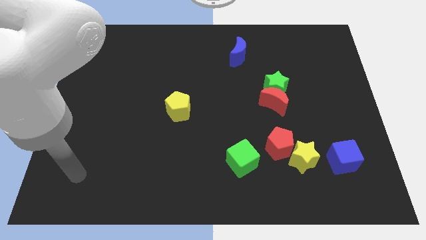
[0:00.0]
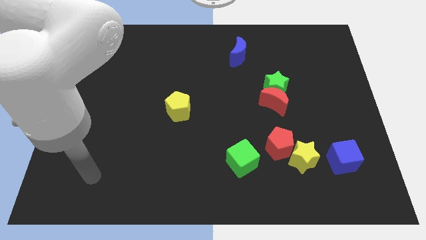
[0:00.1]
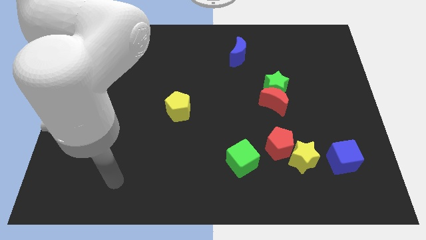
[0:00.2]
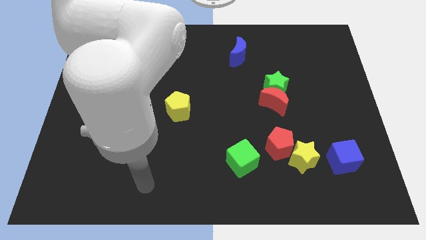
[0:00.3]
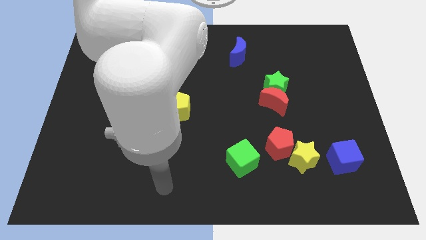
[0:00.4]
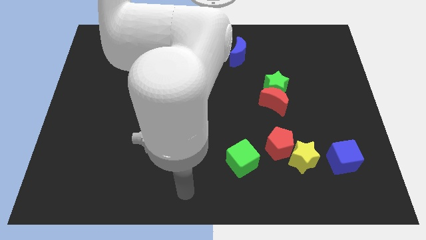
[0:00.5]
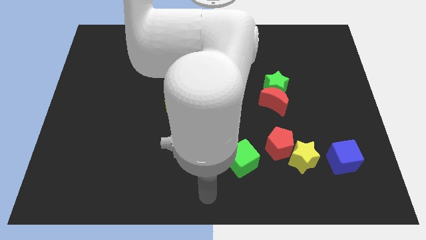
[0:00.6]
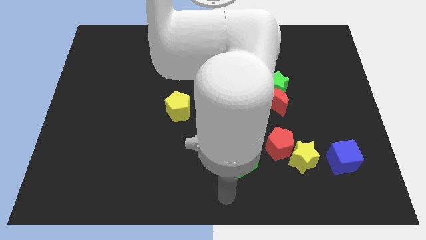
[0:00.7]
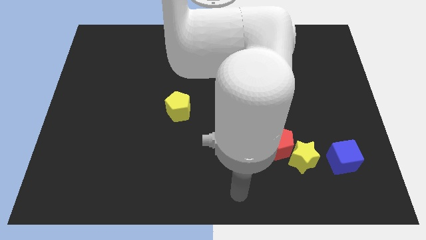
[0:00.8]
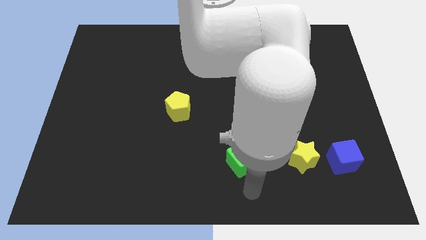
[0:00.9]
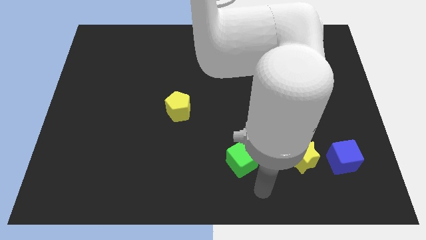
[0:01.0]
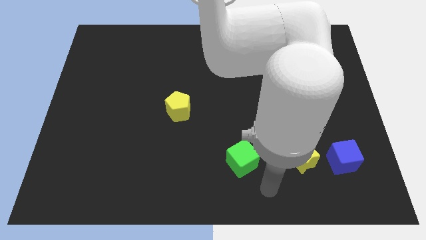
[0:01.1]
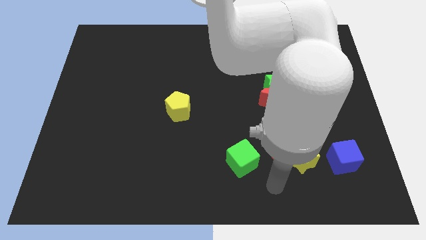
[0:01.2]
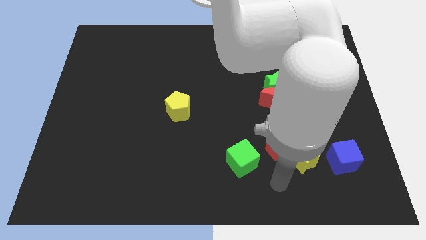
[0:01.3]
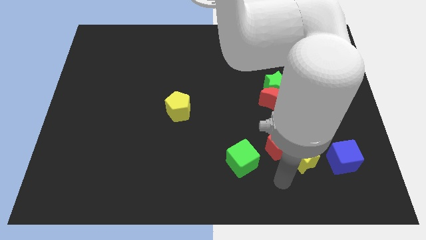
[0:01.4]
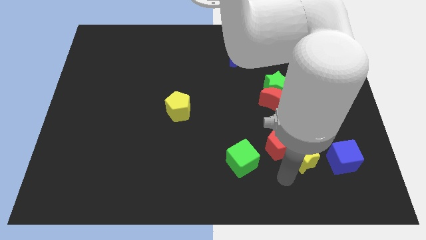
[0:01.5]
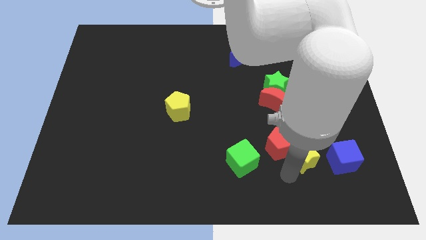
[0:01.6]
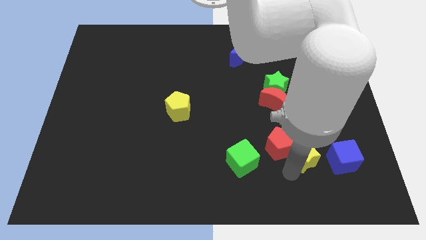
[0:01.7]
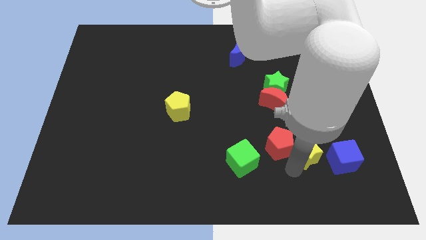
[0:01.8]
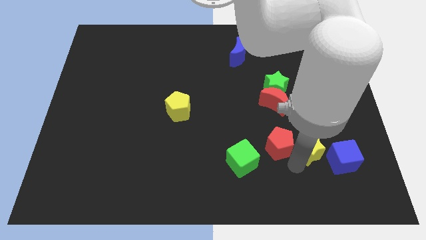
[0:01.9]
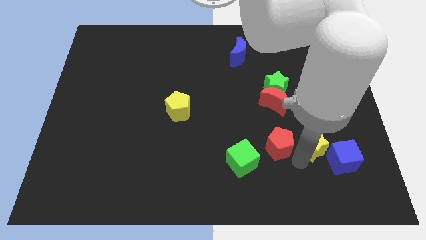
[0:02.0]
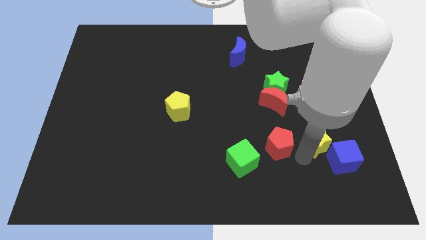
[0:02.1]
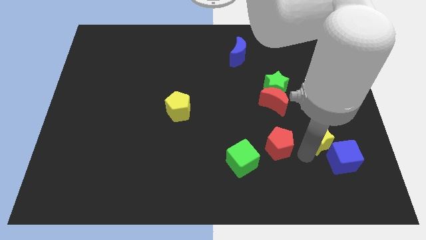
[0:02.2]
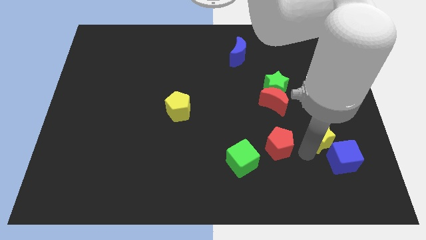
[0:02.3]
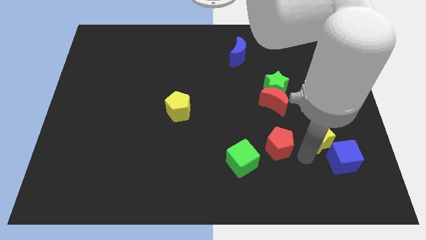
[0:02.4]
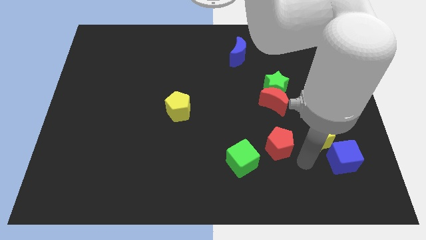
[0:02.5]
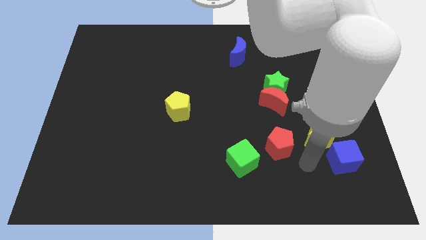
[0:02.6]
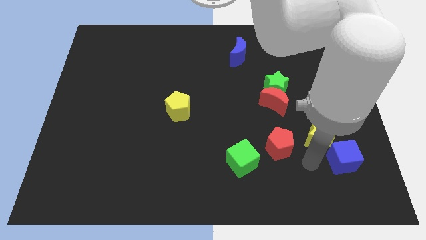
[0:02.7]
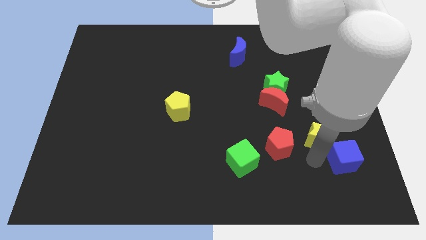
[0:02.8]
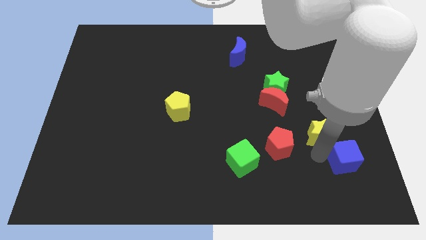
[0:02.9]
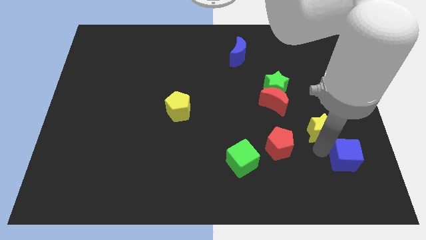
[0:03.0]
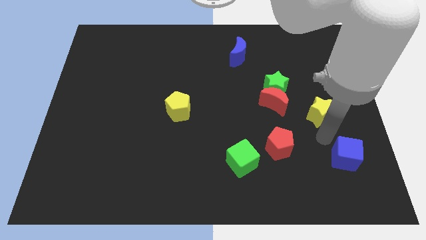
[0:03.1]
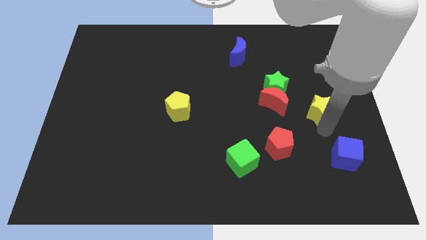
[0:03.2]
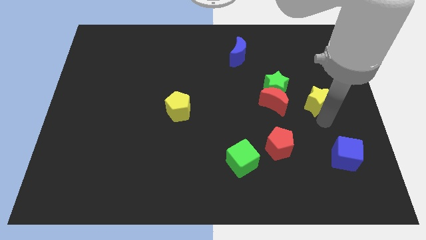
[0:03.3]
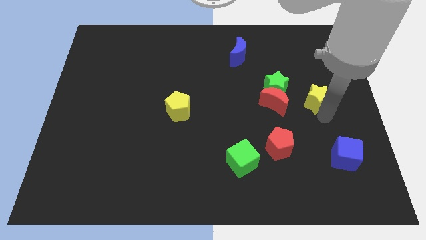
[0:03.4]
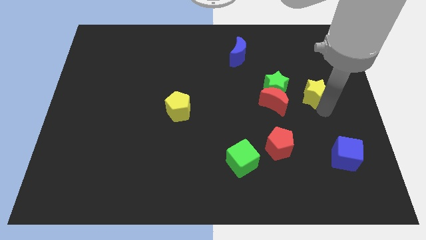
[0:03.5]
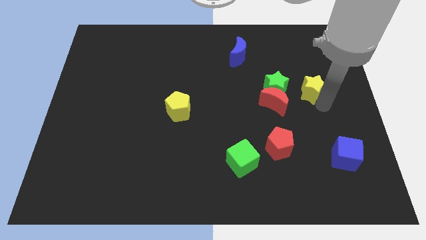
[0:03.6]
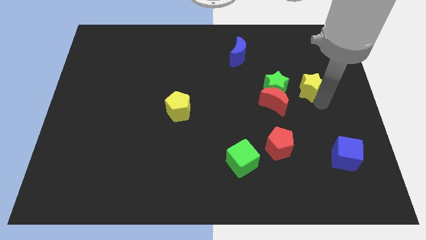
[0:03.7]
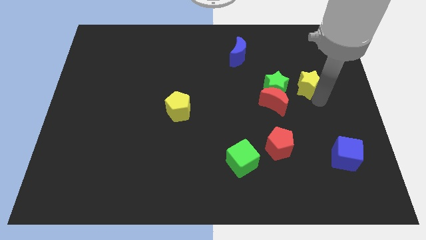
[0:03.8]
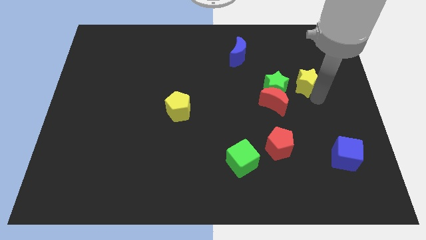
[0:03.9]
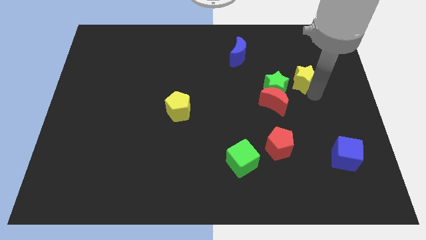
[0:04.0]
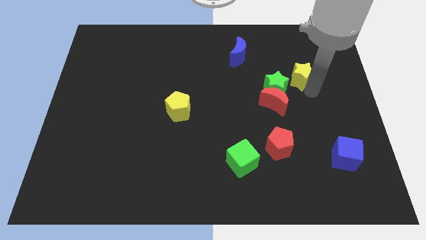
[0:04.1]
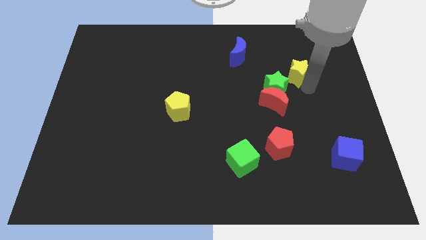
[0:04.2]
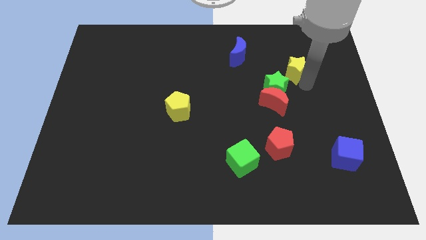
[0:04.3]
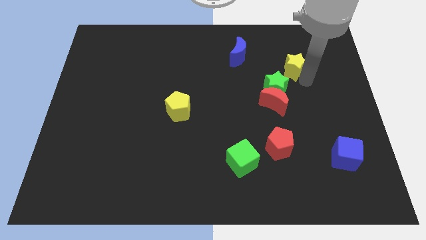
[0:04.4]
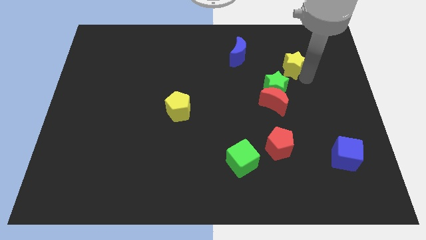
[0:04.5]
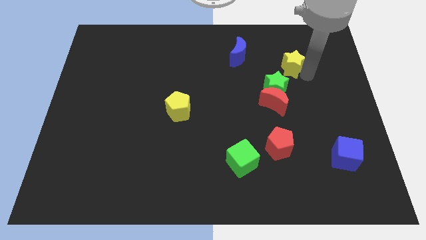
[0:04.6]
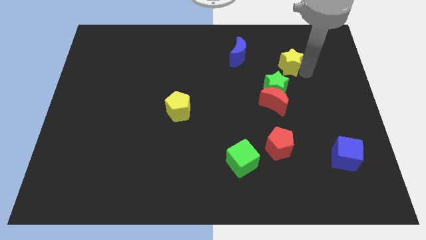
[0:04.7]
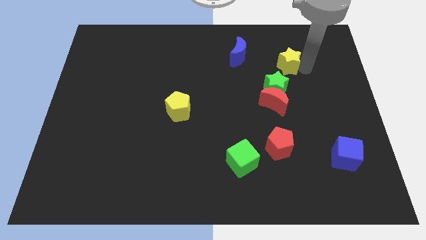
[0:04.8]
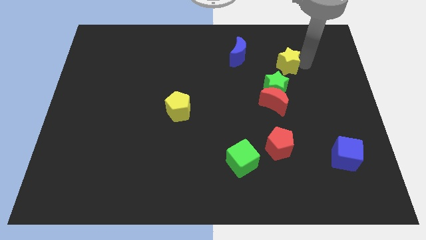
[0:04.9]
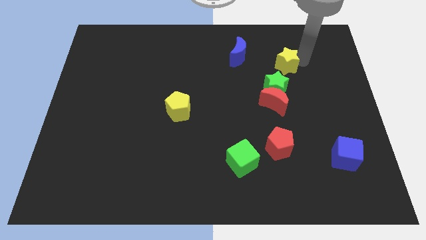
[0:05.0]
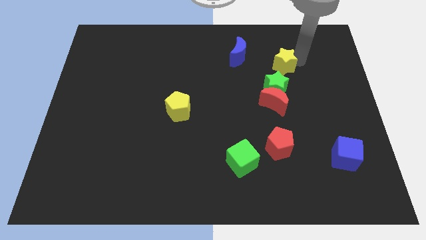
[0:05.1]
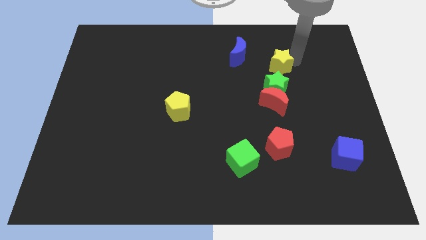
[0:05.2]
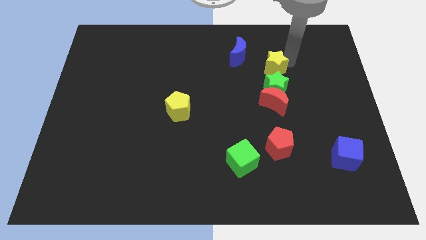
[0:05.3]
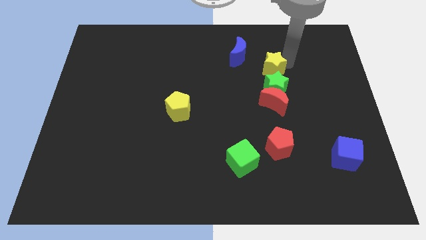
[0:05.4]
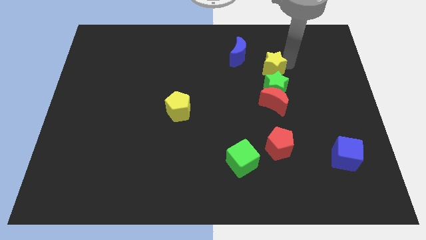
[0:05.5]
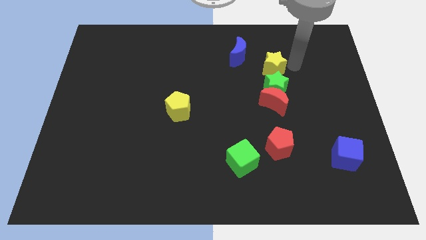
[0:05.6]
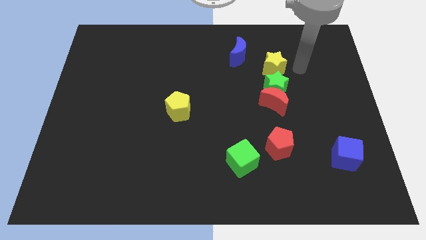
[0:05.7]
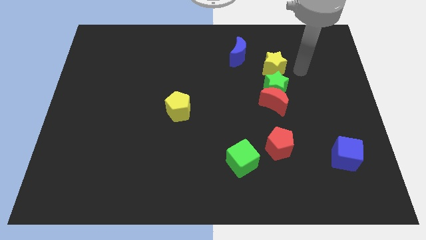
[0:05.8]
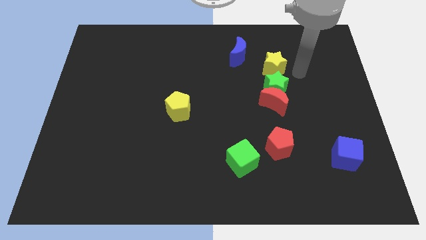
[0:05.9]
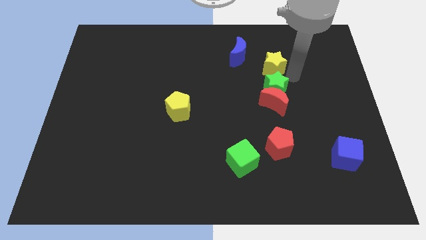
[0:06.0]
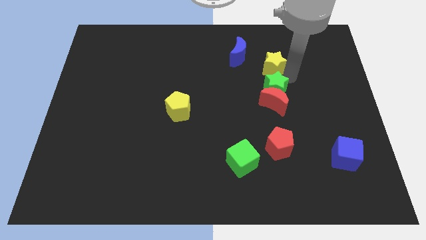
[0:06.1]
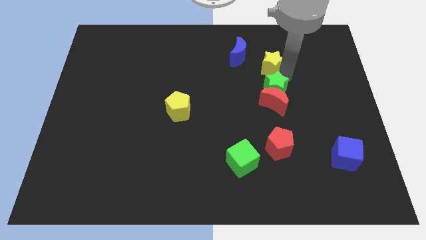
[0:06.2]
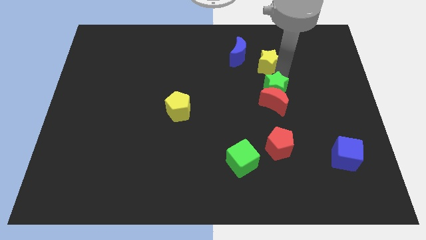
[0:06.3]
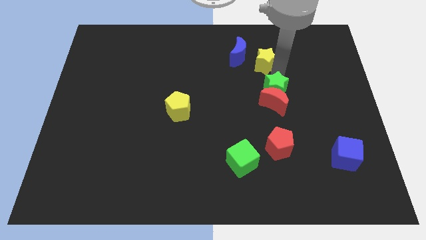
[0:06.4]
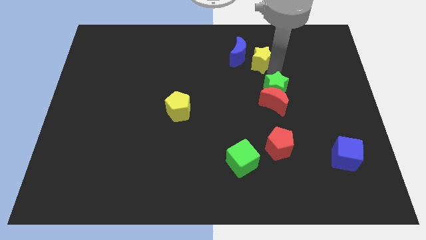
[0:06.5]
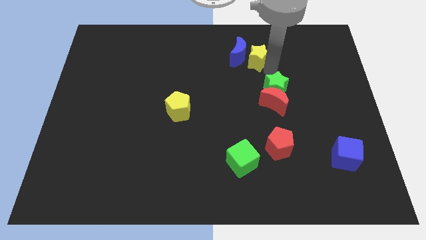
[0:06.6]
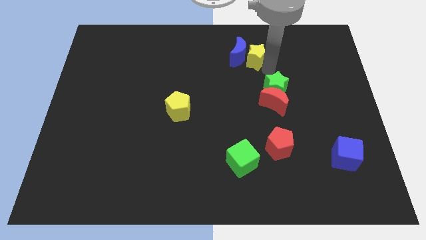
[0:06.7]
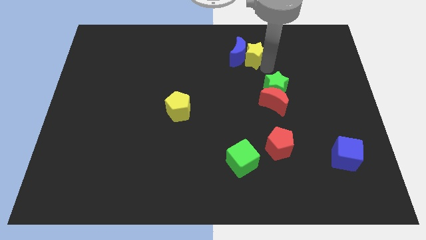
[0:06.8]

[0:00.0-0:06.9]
push the yellow star towards the blue moon

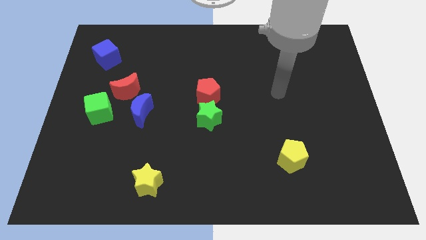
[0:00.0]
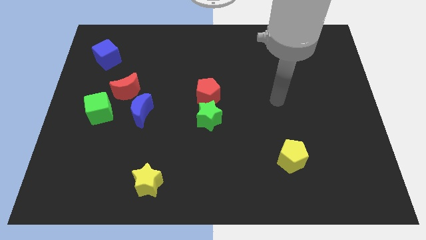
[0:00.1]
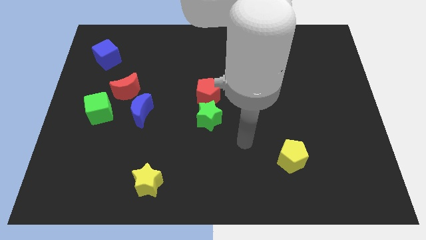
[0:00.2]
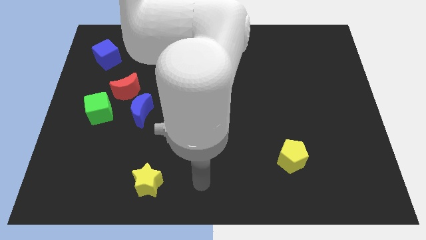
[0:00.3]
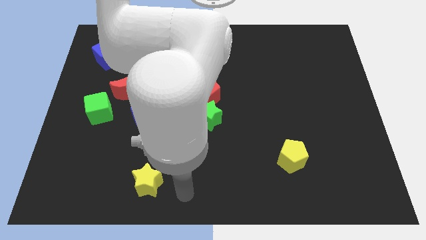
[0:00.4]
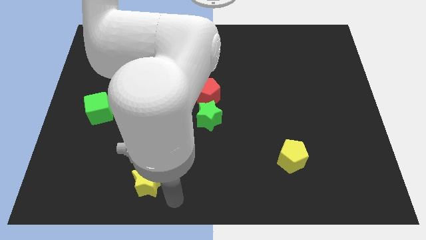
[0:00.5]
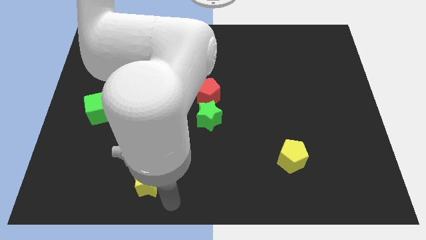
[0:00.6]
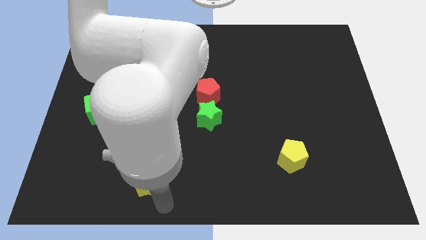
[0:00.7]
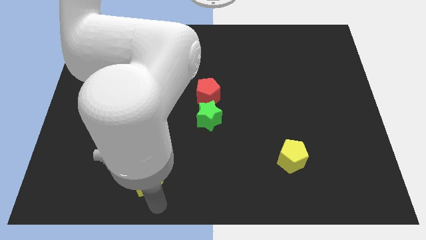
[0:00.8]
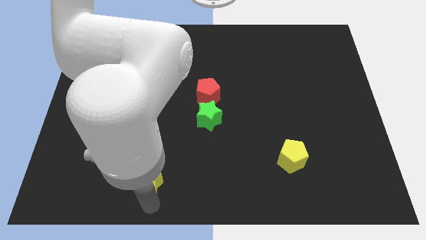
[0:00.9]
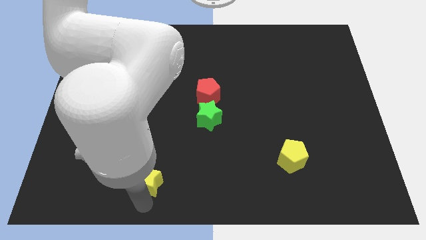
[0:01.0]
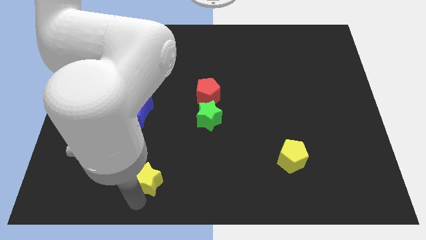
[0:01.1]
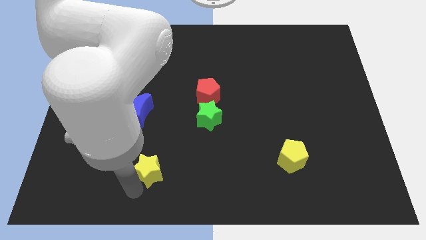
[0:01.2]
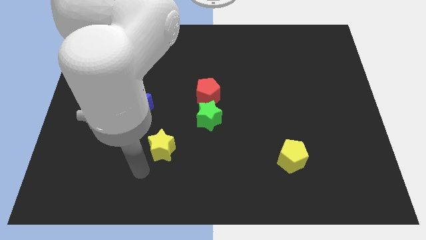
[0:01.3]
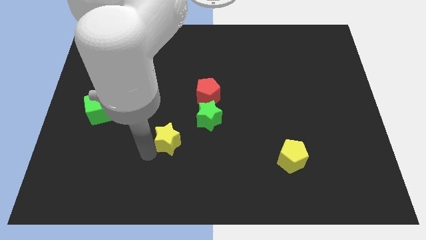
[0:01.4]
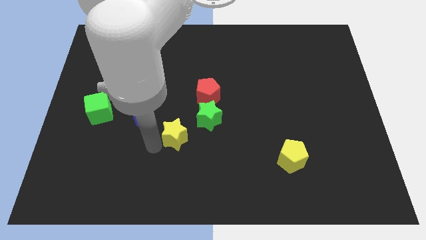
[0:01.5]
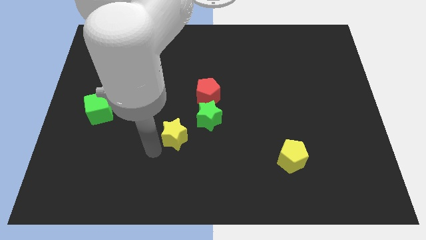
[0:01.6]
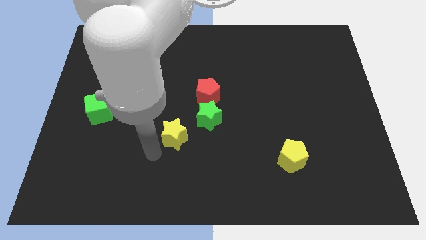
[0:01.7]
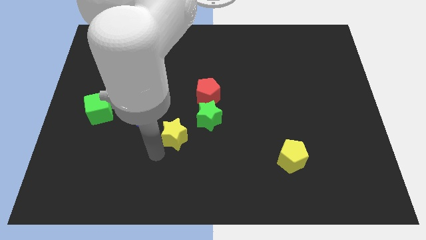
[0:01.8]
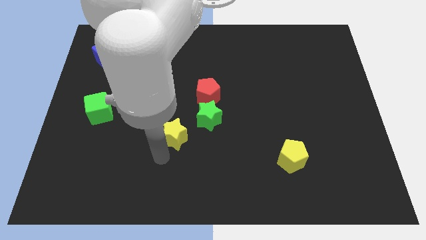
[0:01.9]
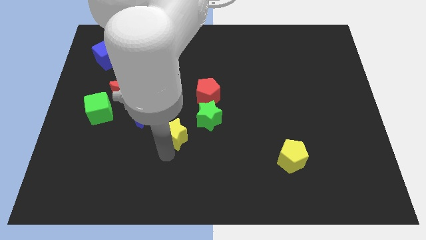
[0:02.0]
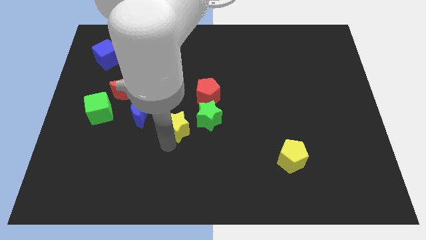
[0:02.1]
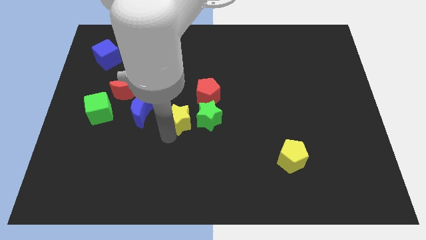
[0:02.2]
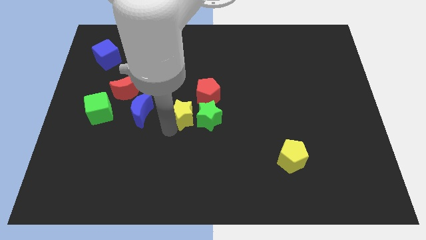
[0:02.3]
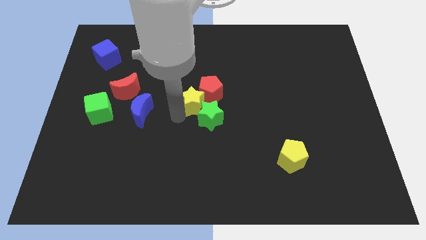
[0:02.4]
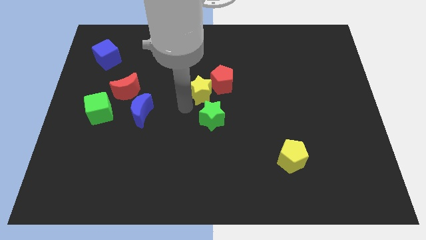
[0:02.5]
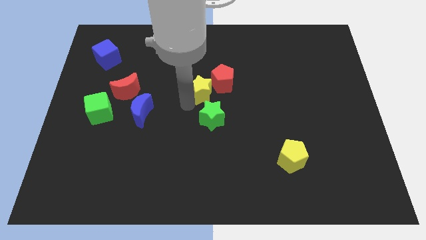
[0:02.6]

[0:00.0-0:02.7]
put the yellow star to the red pentagon
